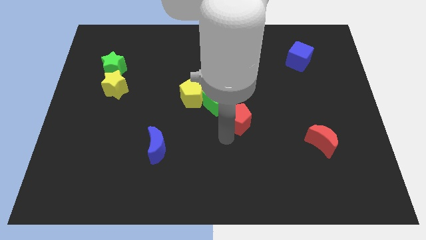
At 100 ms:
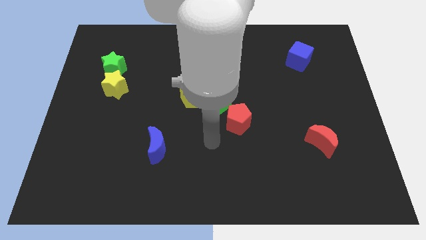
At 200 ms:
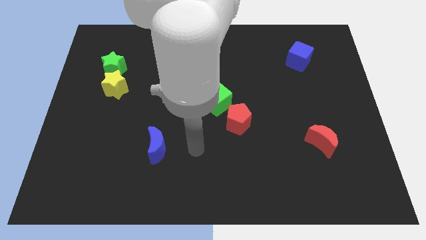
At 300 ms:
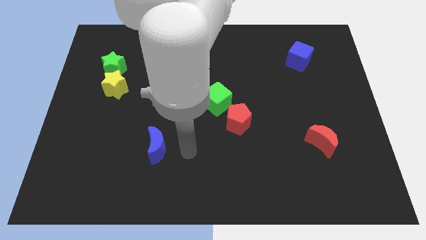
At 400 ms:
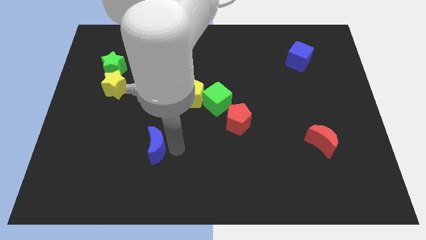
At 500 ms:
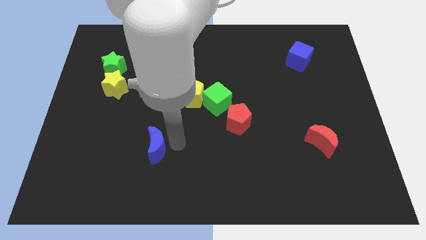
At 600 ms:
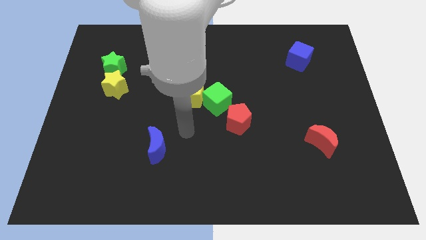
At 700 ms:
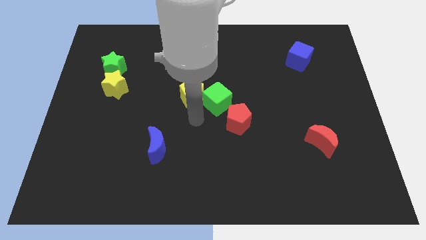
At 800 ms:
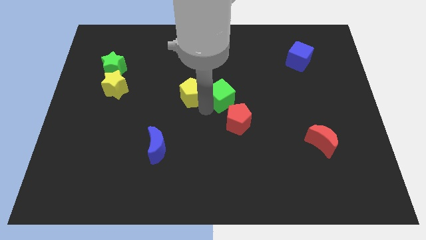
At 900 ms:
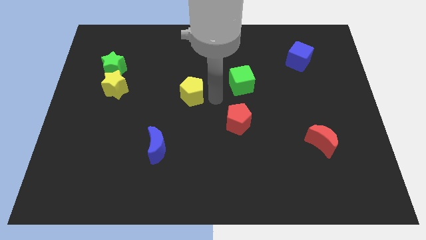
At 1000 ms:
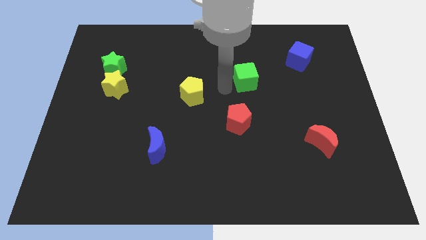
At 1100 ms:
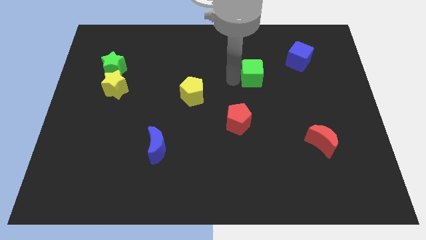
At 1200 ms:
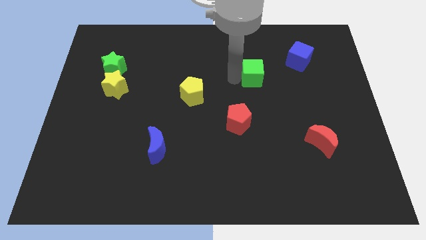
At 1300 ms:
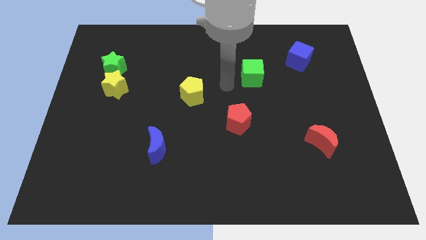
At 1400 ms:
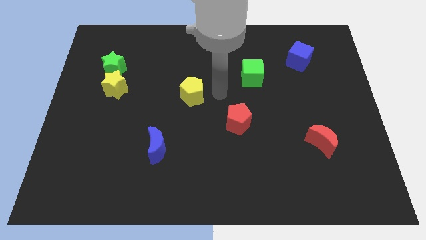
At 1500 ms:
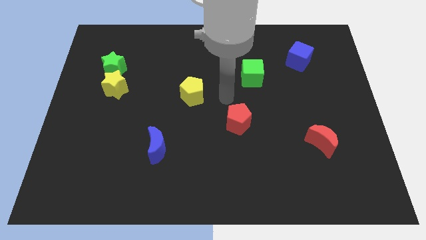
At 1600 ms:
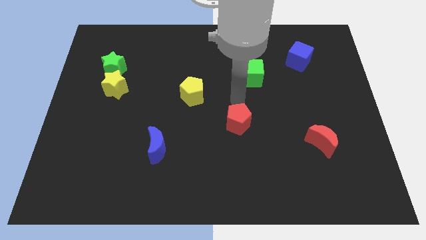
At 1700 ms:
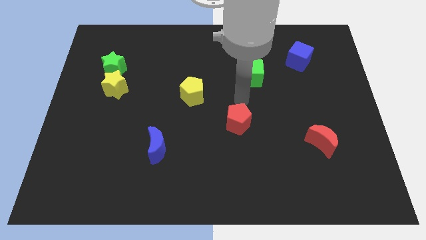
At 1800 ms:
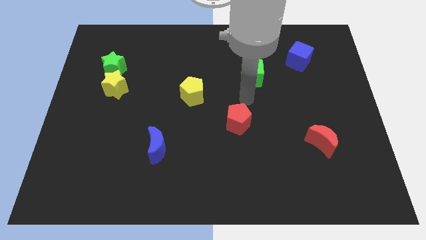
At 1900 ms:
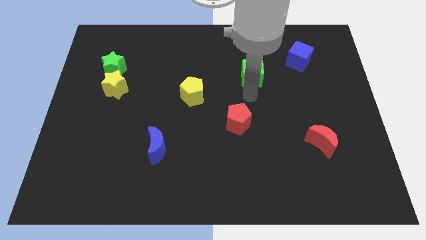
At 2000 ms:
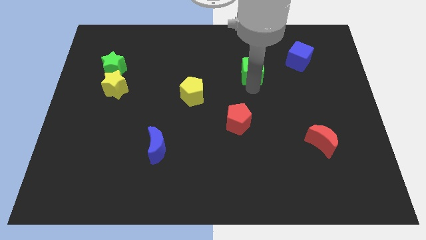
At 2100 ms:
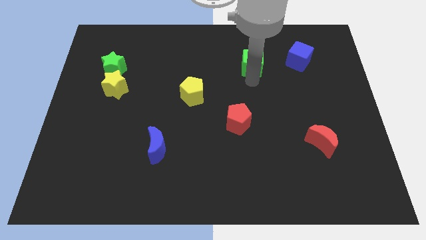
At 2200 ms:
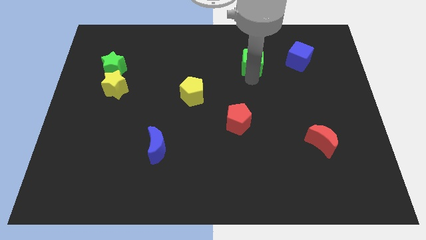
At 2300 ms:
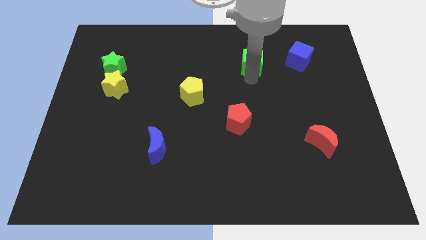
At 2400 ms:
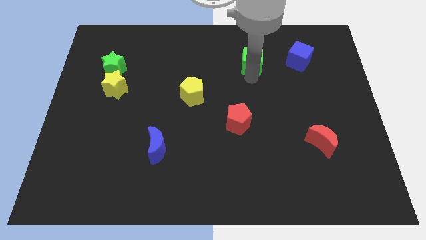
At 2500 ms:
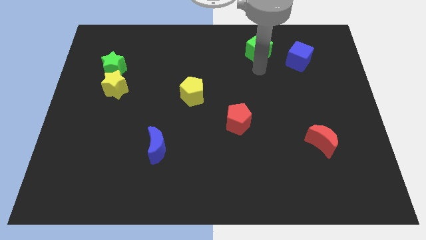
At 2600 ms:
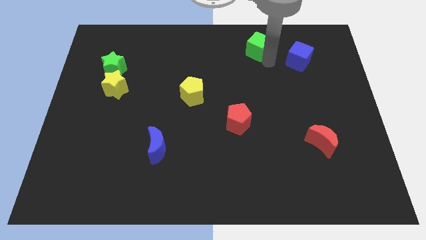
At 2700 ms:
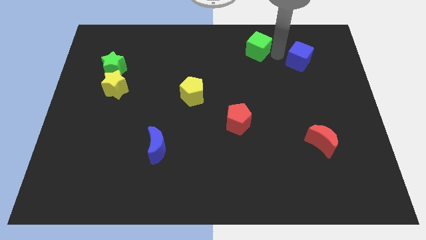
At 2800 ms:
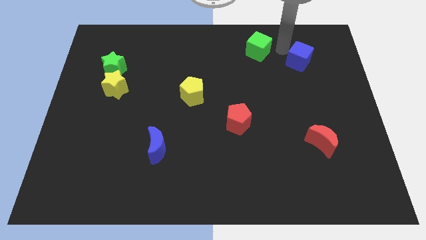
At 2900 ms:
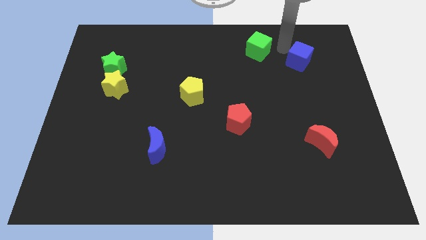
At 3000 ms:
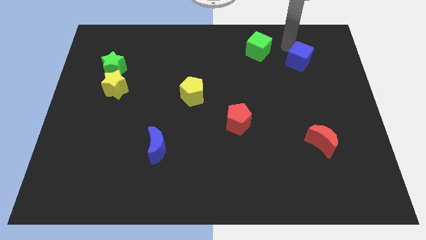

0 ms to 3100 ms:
place the green cube diagonally to top right of the yellow pentagon

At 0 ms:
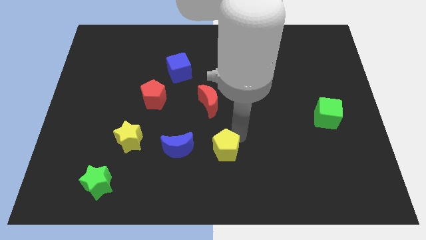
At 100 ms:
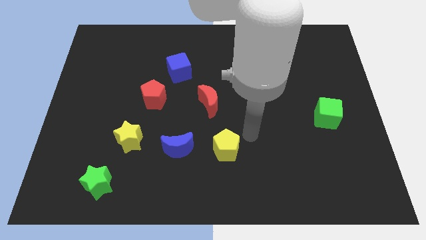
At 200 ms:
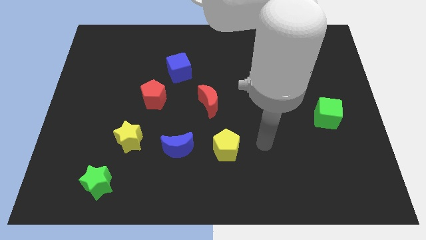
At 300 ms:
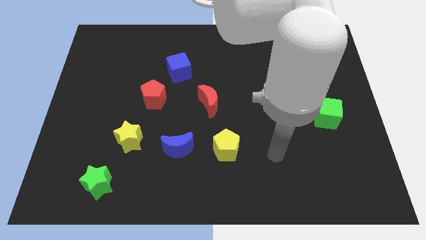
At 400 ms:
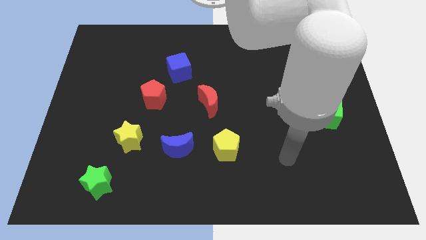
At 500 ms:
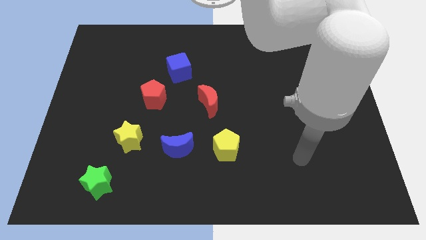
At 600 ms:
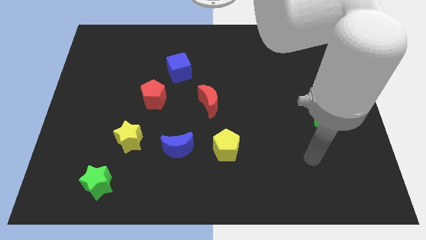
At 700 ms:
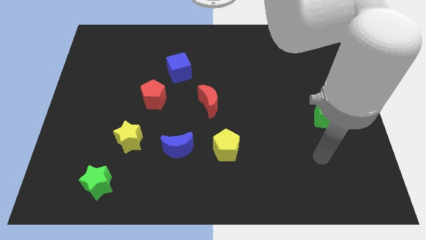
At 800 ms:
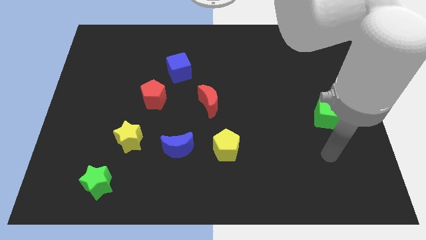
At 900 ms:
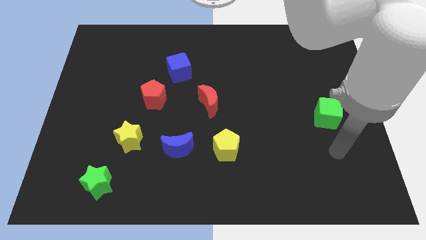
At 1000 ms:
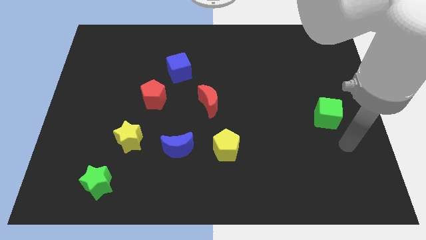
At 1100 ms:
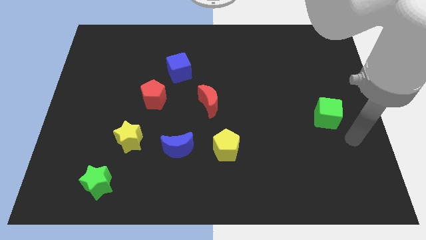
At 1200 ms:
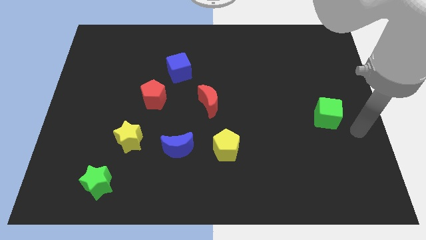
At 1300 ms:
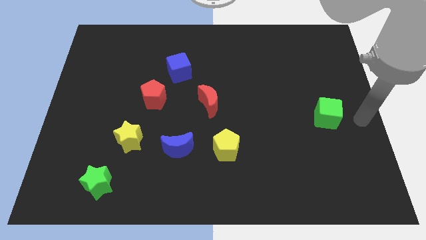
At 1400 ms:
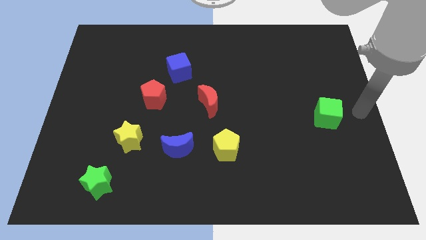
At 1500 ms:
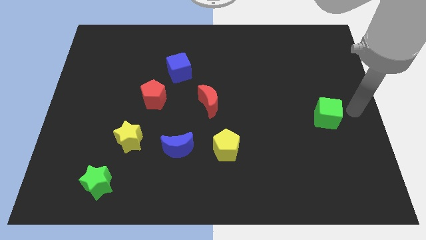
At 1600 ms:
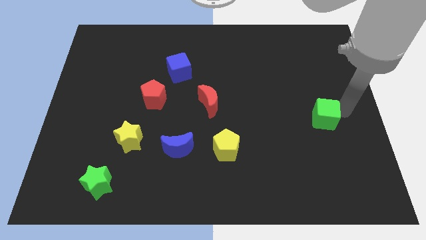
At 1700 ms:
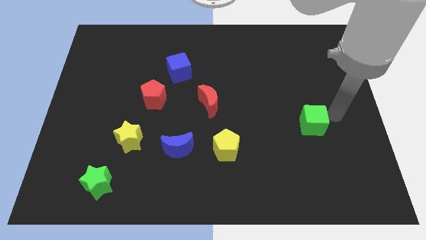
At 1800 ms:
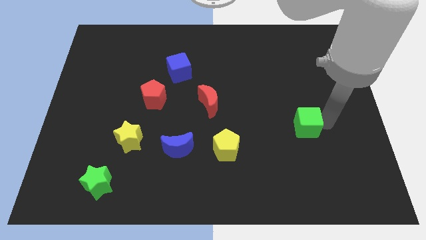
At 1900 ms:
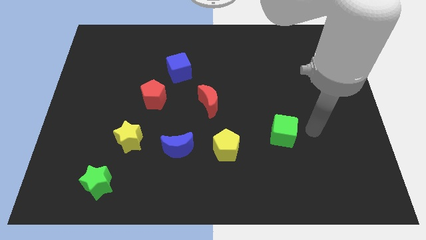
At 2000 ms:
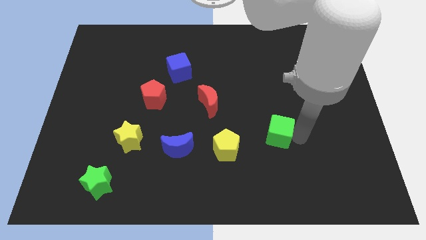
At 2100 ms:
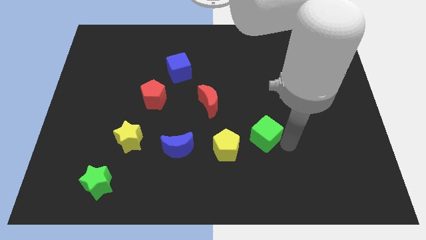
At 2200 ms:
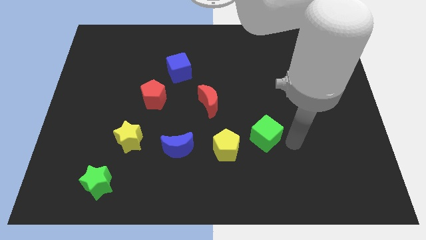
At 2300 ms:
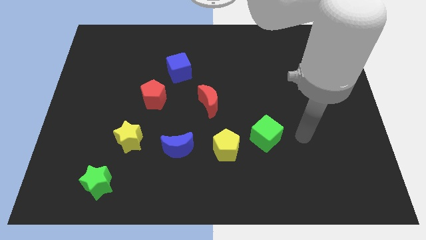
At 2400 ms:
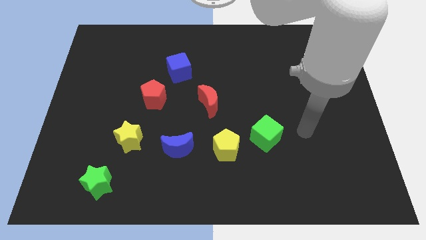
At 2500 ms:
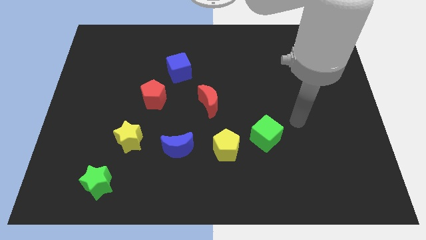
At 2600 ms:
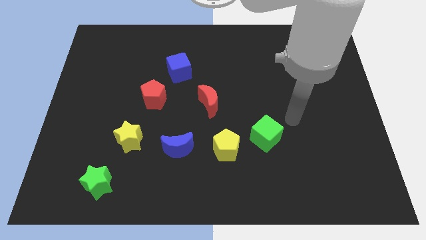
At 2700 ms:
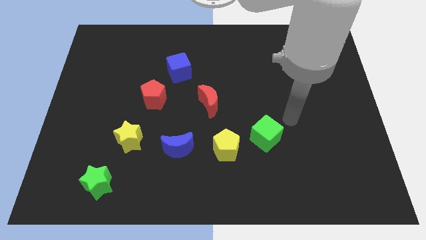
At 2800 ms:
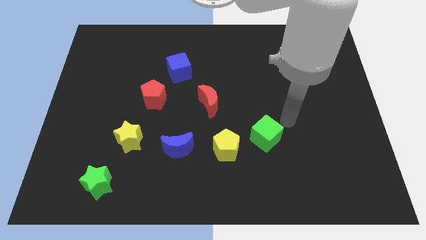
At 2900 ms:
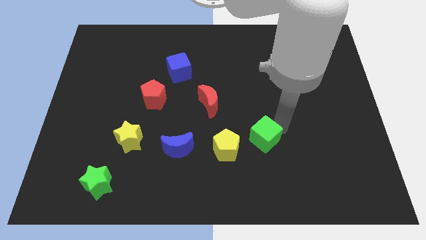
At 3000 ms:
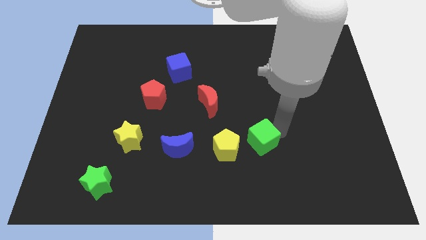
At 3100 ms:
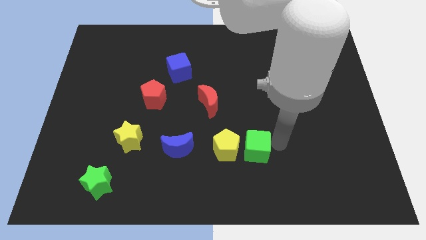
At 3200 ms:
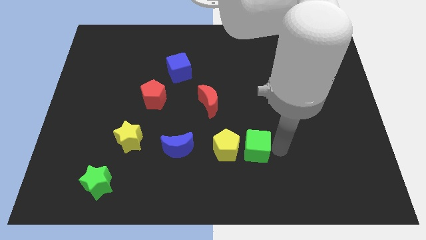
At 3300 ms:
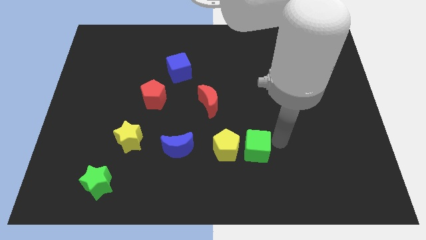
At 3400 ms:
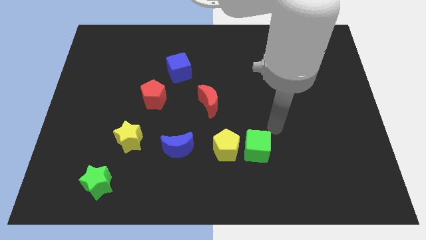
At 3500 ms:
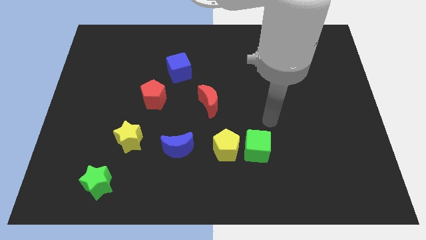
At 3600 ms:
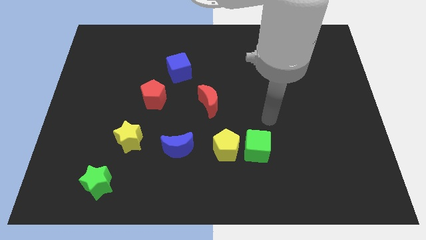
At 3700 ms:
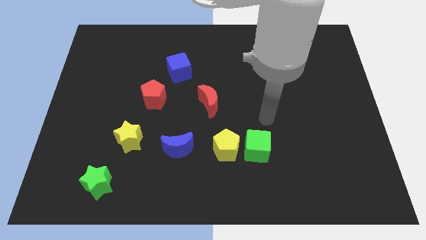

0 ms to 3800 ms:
place the green cube to the right of the yellow pentagon

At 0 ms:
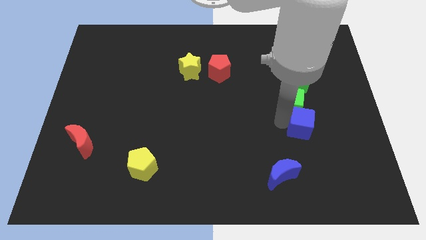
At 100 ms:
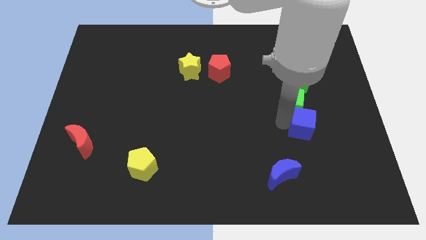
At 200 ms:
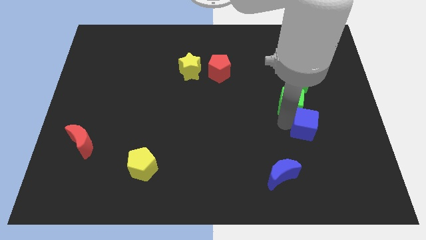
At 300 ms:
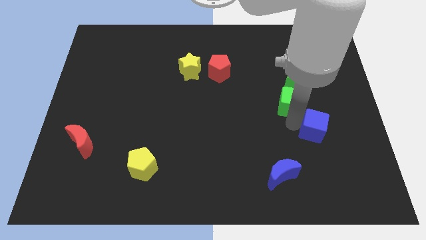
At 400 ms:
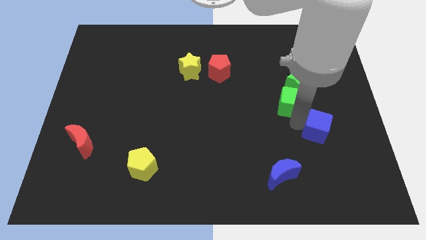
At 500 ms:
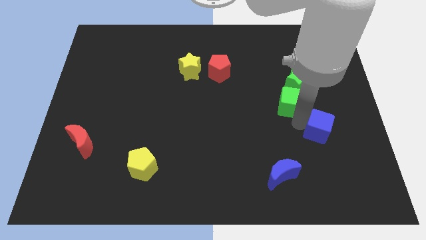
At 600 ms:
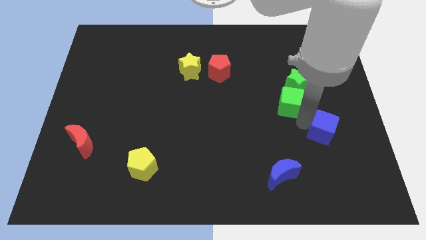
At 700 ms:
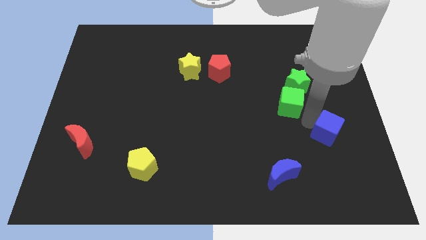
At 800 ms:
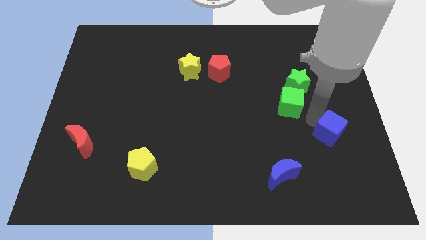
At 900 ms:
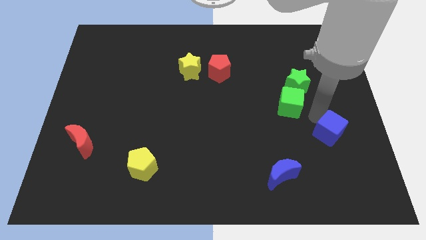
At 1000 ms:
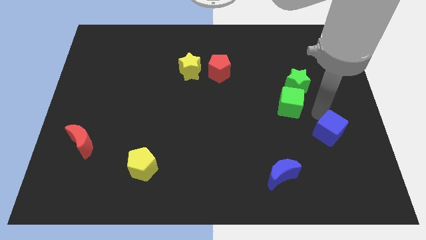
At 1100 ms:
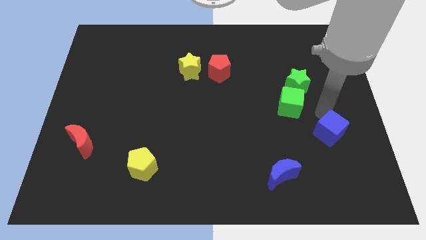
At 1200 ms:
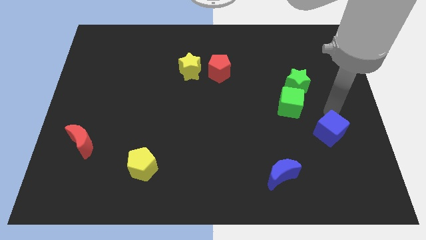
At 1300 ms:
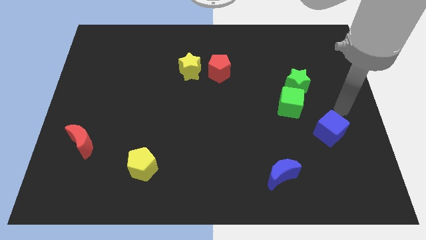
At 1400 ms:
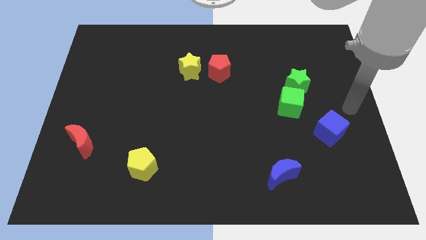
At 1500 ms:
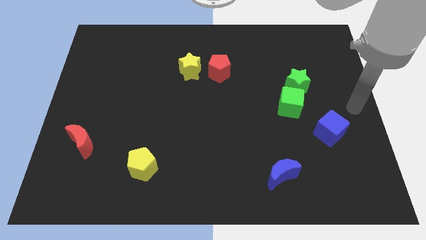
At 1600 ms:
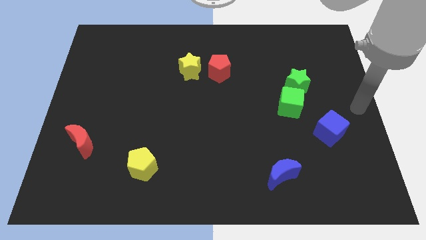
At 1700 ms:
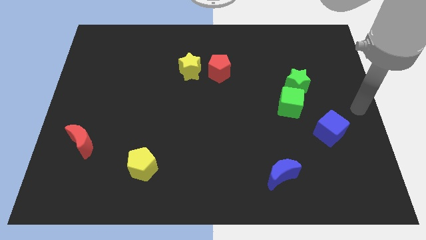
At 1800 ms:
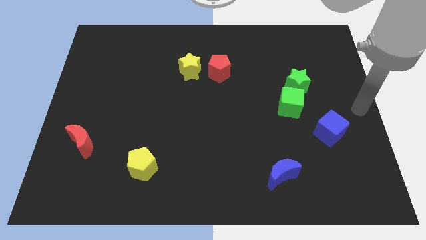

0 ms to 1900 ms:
move the blue cube away from the bottom side of the green cube
